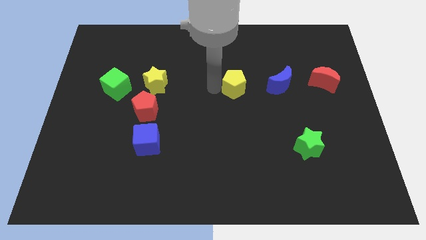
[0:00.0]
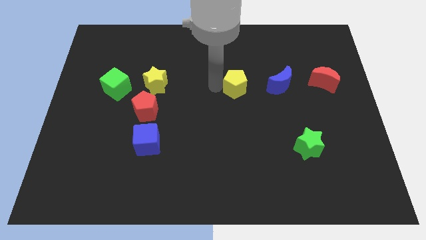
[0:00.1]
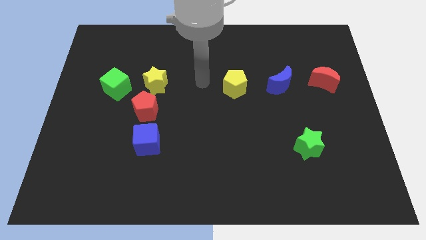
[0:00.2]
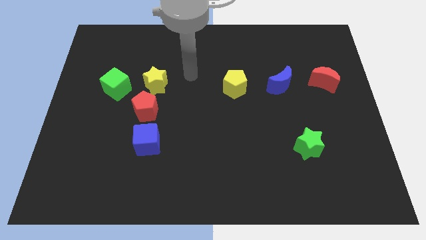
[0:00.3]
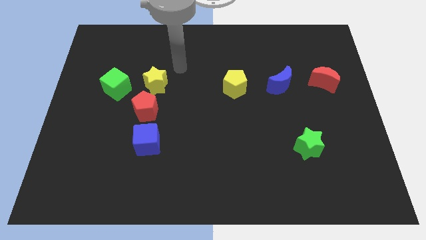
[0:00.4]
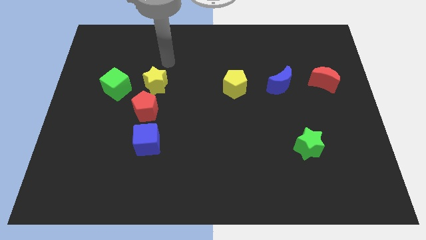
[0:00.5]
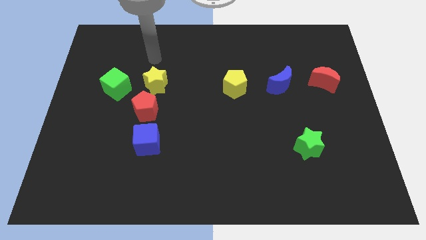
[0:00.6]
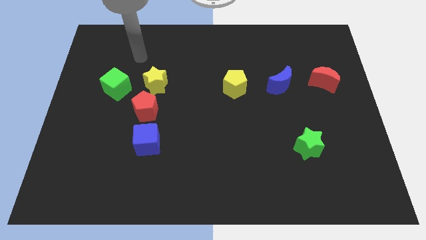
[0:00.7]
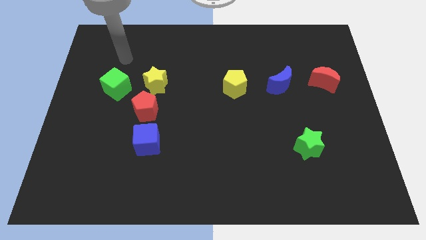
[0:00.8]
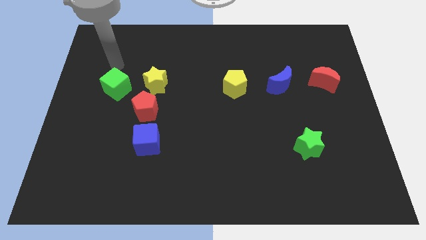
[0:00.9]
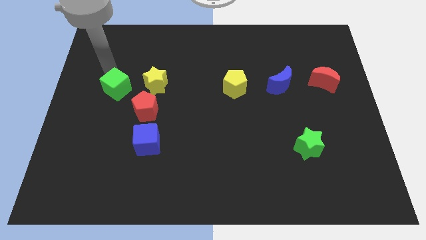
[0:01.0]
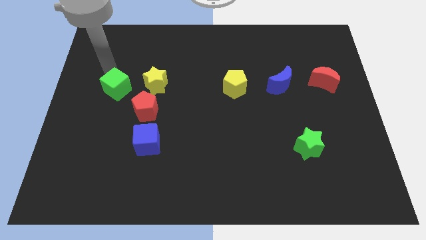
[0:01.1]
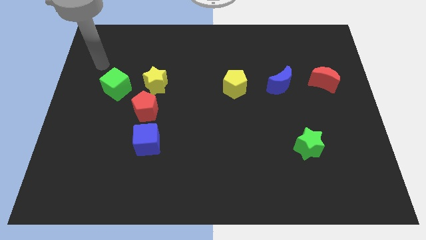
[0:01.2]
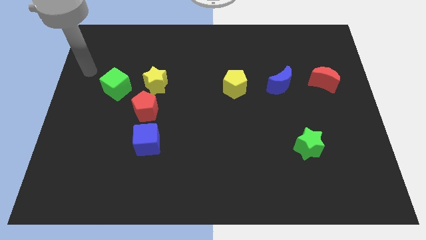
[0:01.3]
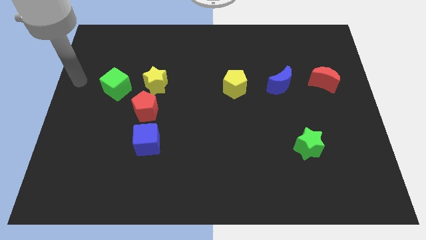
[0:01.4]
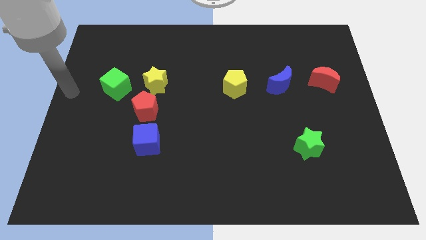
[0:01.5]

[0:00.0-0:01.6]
move your arm away from the yellow pentagon

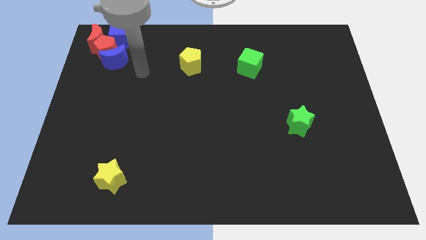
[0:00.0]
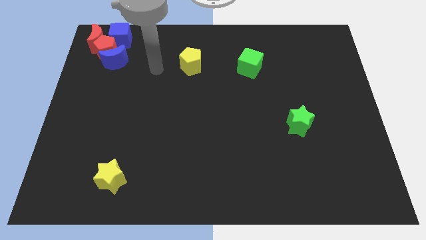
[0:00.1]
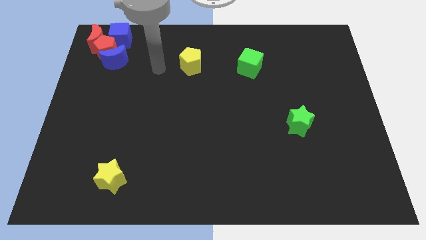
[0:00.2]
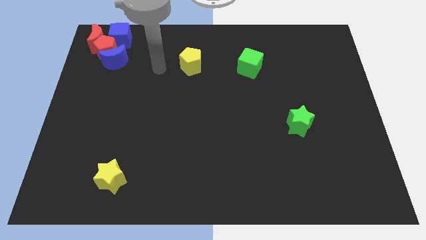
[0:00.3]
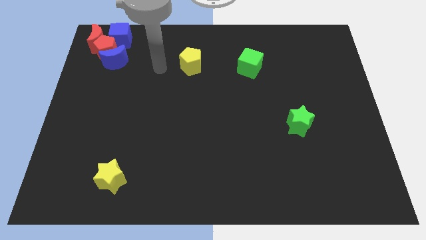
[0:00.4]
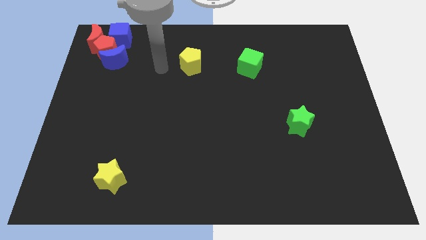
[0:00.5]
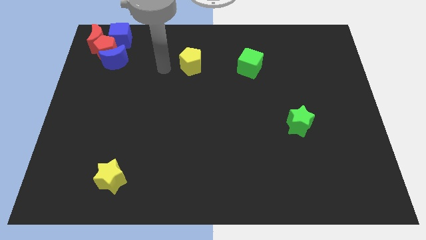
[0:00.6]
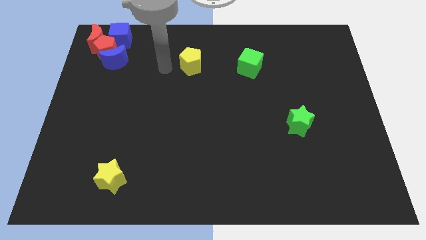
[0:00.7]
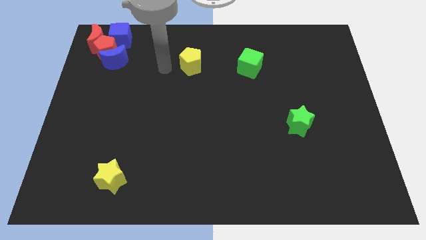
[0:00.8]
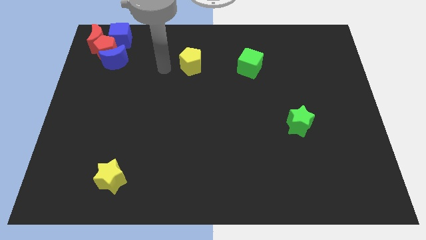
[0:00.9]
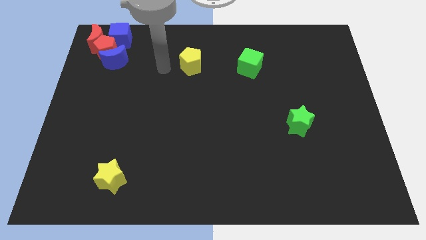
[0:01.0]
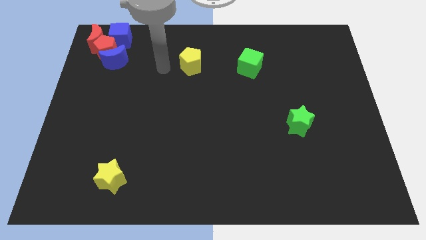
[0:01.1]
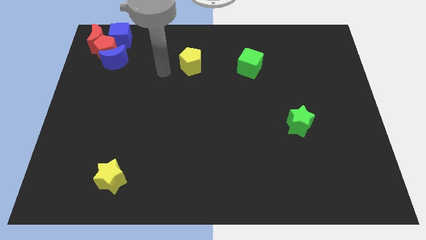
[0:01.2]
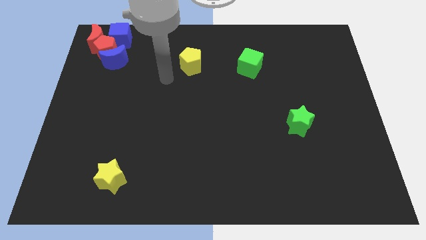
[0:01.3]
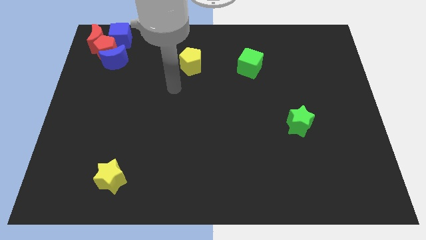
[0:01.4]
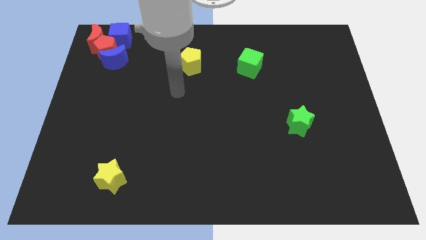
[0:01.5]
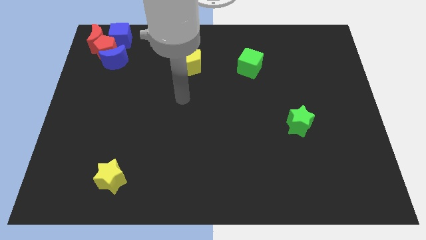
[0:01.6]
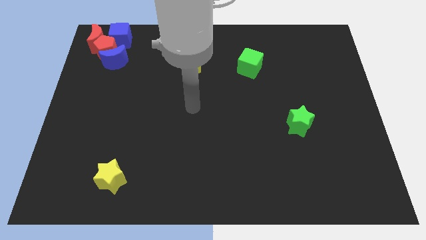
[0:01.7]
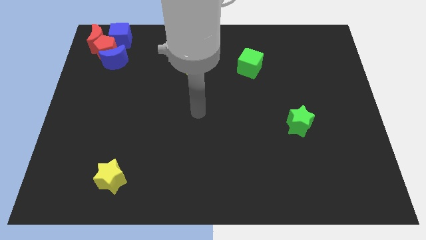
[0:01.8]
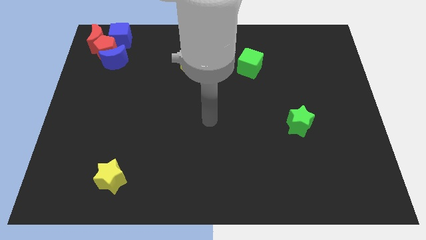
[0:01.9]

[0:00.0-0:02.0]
place arm in the center

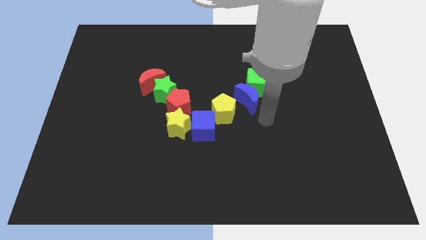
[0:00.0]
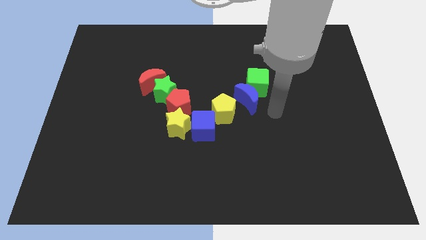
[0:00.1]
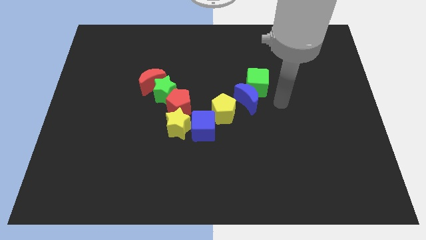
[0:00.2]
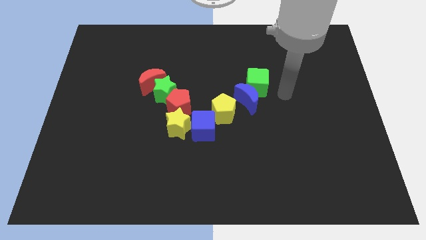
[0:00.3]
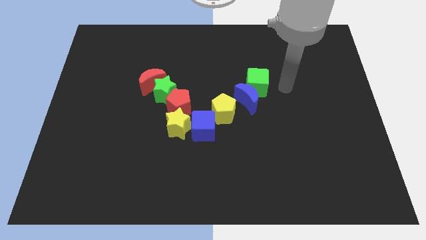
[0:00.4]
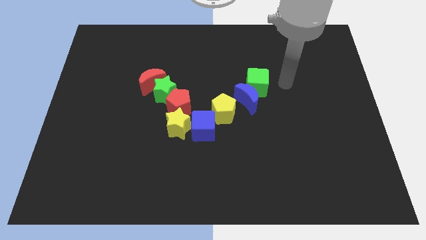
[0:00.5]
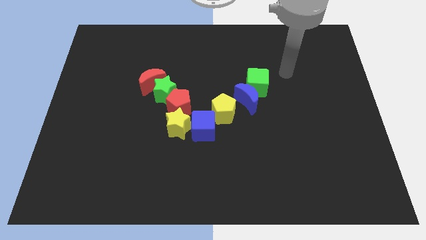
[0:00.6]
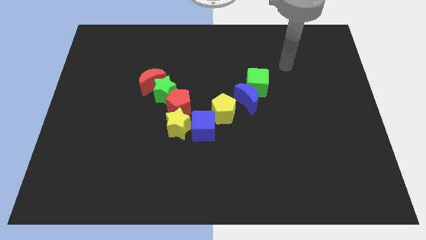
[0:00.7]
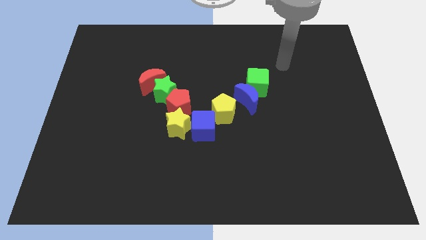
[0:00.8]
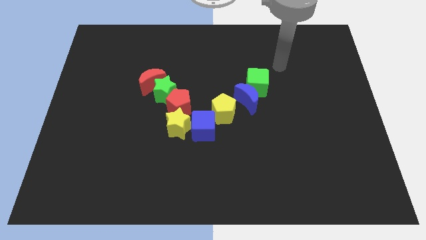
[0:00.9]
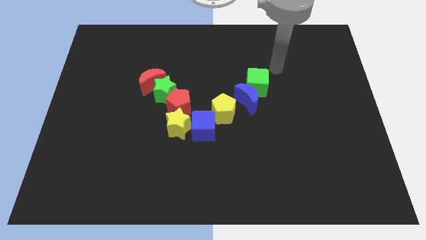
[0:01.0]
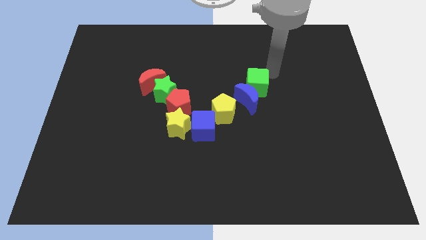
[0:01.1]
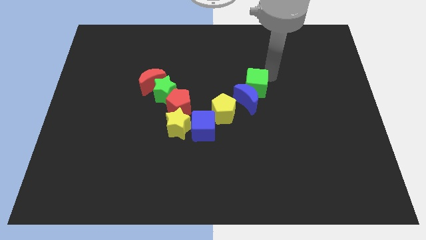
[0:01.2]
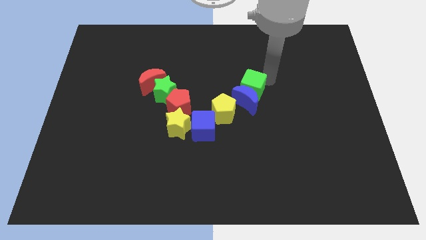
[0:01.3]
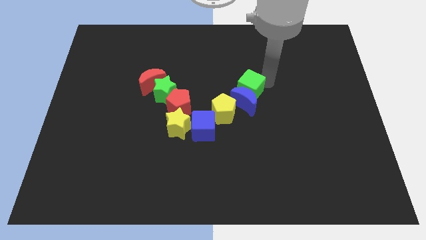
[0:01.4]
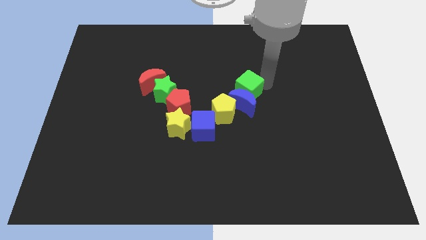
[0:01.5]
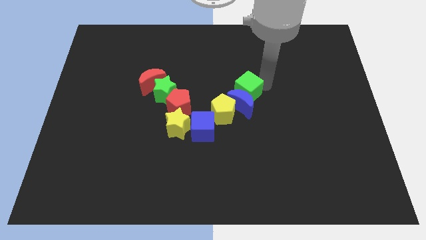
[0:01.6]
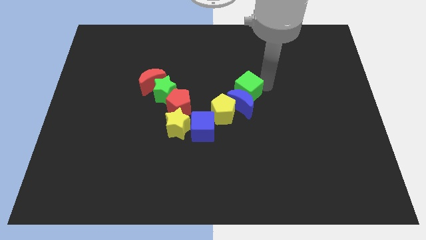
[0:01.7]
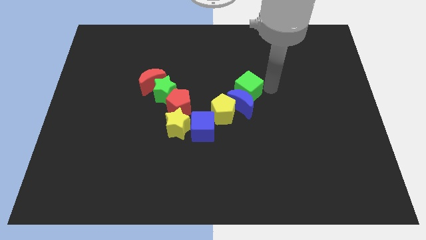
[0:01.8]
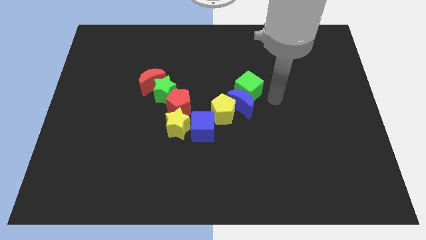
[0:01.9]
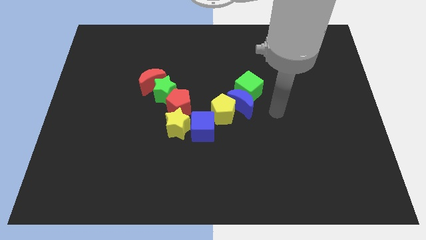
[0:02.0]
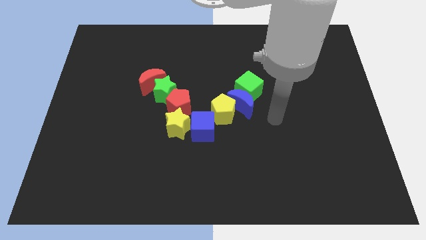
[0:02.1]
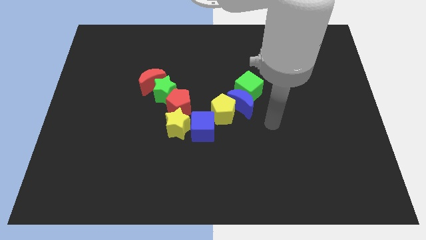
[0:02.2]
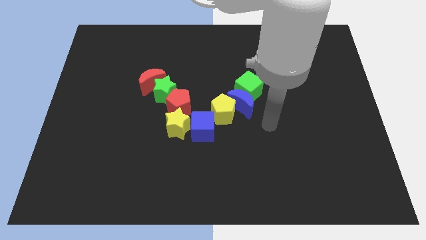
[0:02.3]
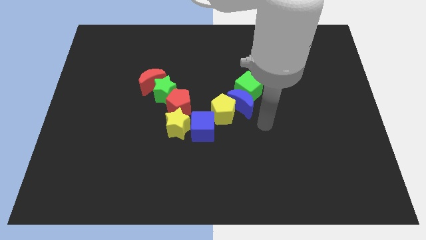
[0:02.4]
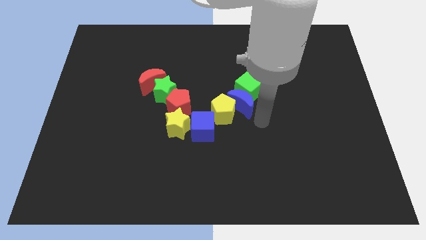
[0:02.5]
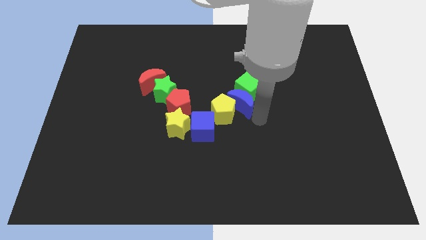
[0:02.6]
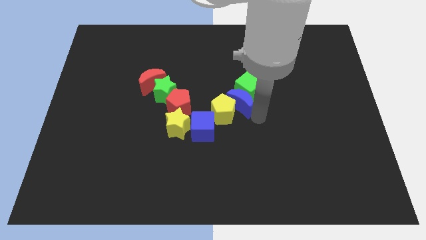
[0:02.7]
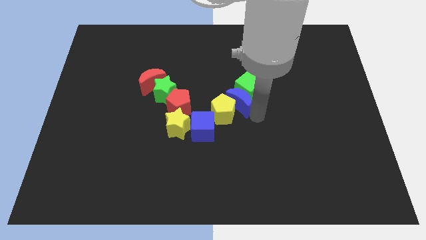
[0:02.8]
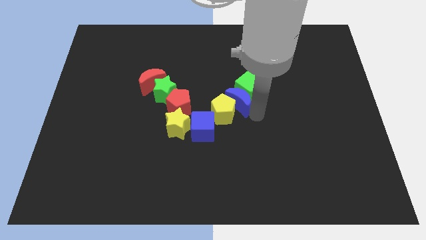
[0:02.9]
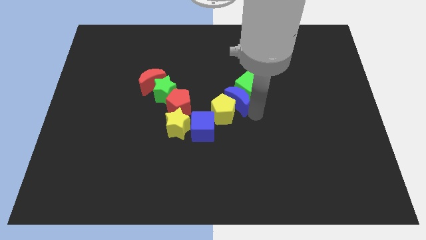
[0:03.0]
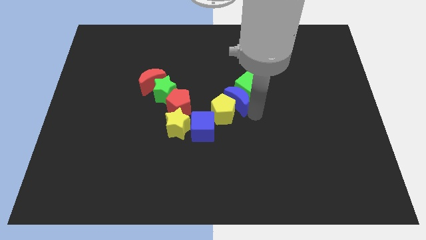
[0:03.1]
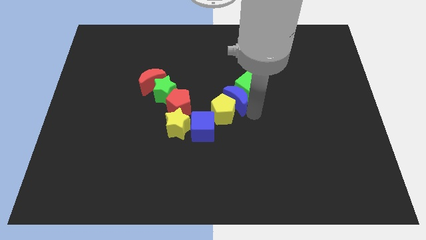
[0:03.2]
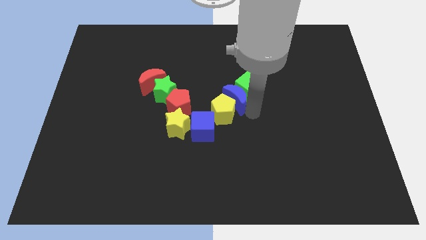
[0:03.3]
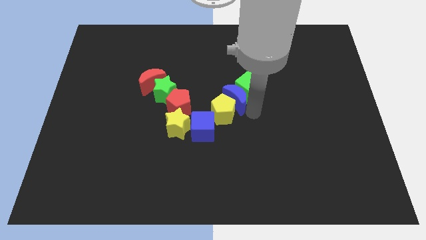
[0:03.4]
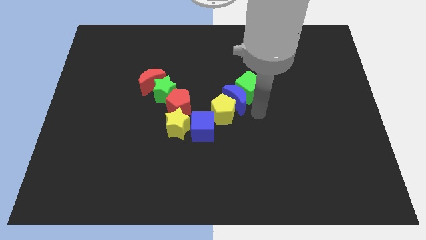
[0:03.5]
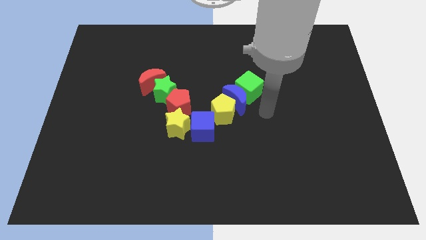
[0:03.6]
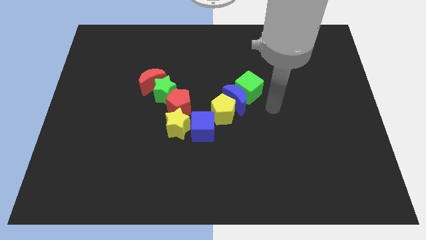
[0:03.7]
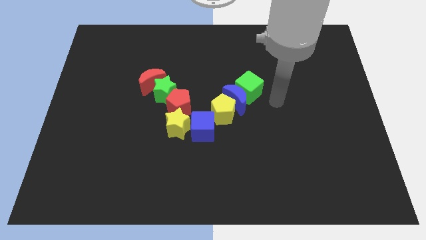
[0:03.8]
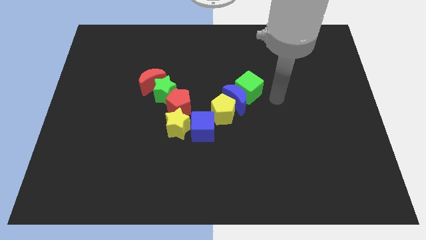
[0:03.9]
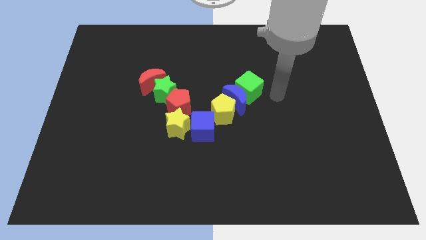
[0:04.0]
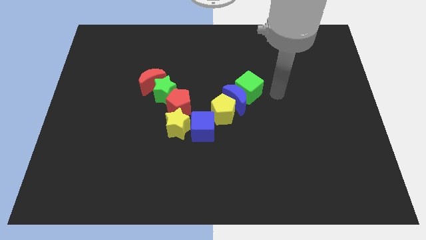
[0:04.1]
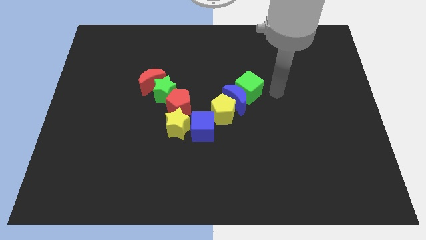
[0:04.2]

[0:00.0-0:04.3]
push the green cube into the blue crescent

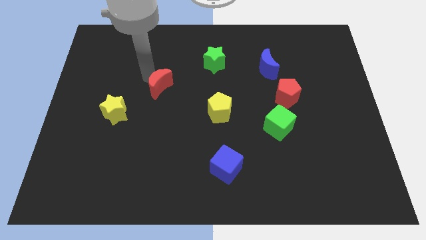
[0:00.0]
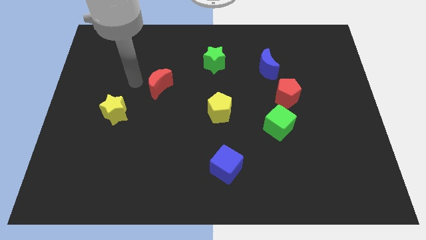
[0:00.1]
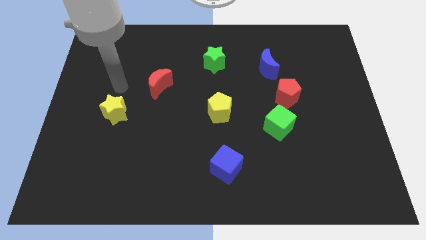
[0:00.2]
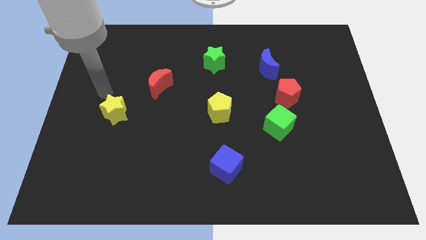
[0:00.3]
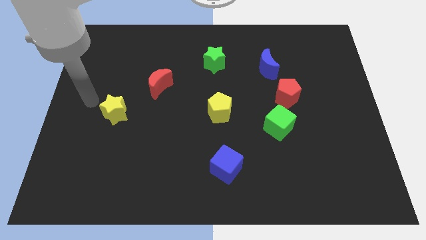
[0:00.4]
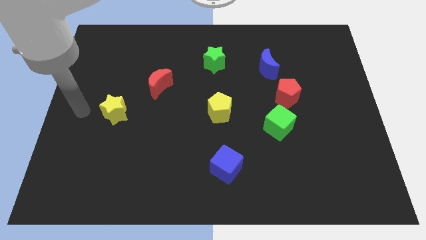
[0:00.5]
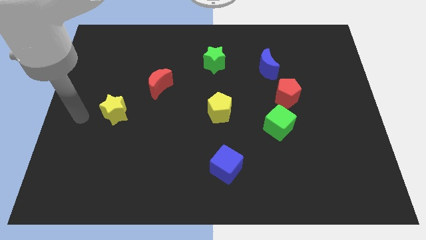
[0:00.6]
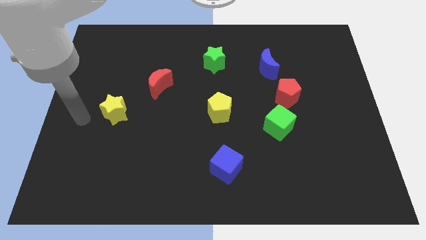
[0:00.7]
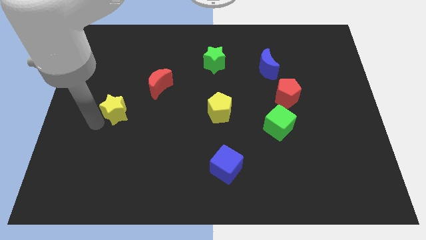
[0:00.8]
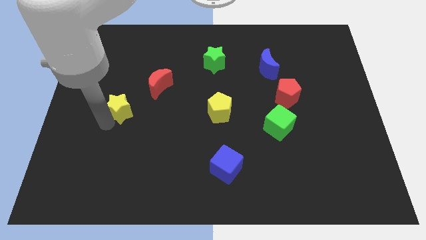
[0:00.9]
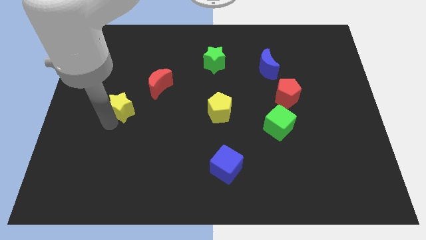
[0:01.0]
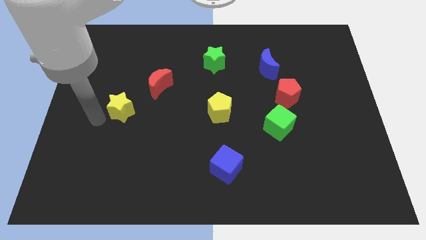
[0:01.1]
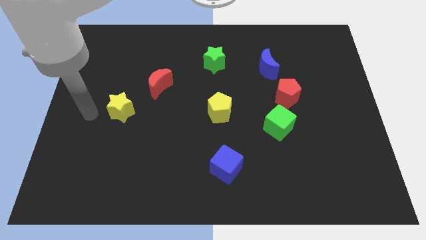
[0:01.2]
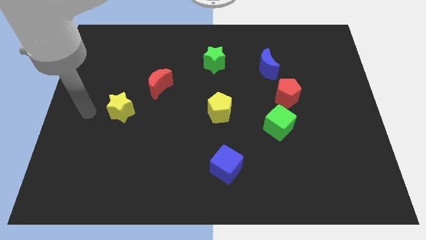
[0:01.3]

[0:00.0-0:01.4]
move your arm away from the red moon
